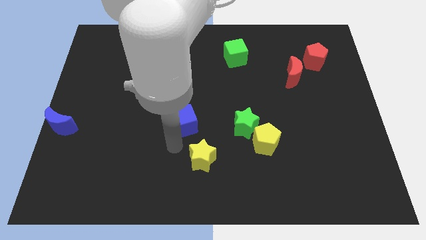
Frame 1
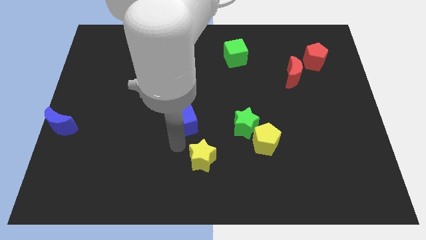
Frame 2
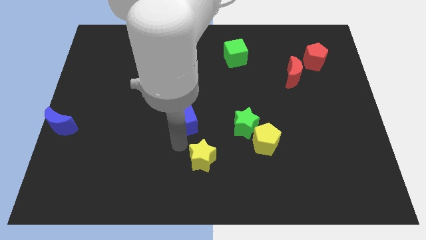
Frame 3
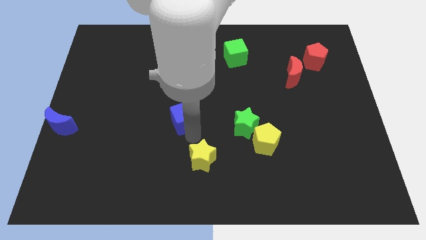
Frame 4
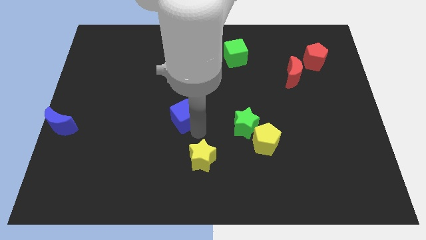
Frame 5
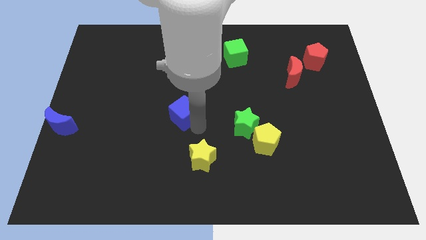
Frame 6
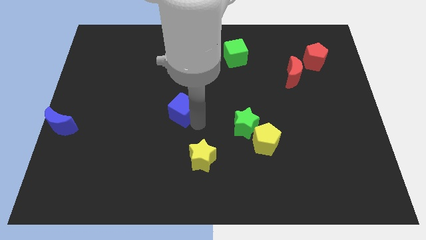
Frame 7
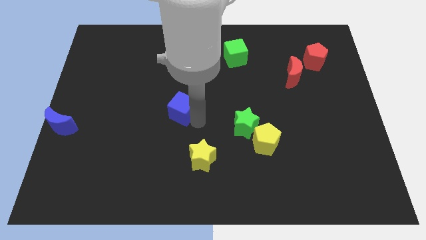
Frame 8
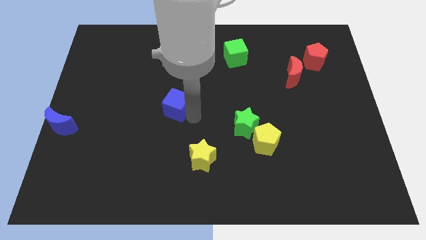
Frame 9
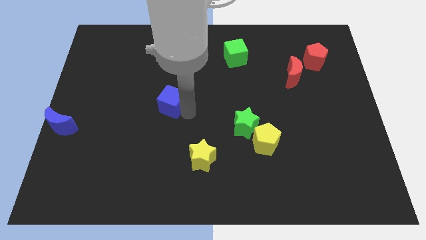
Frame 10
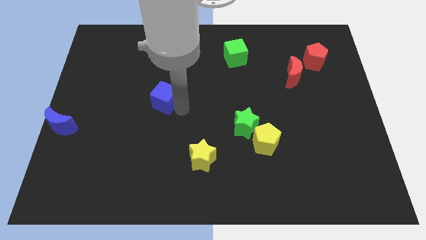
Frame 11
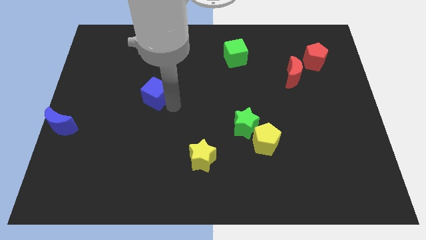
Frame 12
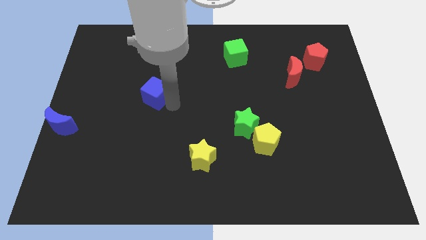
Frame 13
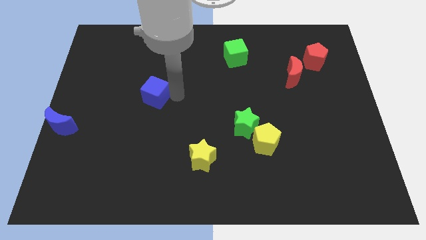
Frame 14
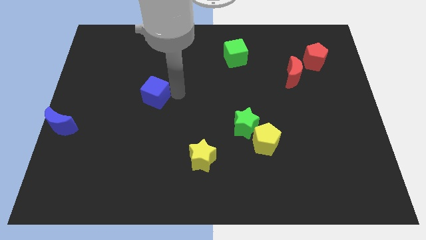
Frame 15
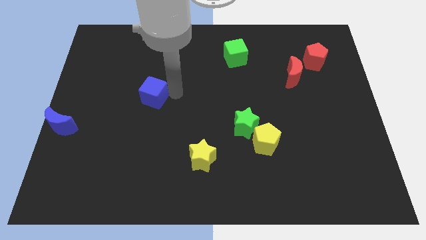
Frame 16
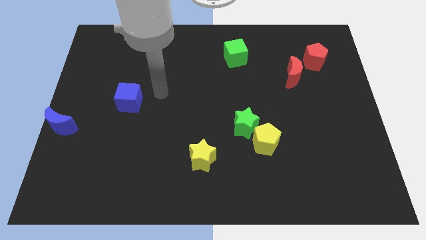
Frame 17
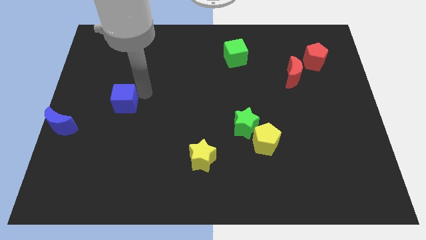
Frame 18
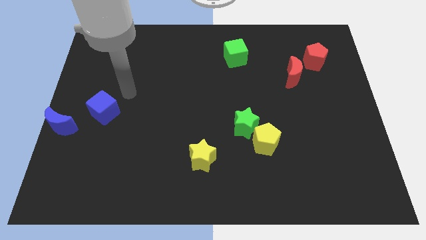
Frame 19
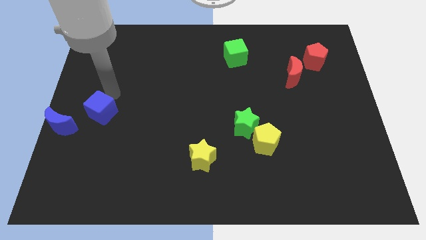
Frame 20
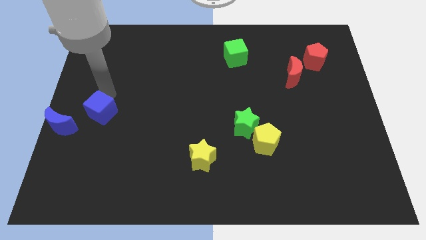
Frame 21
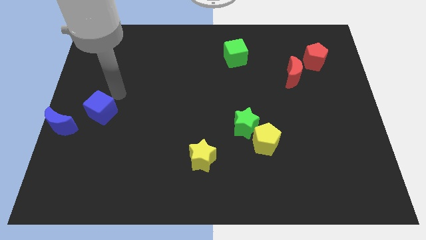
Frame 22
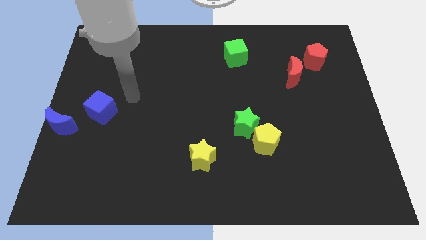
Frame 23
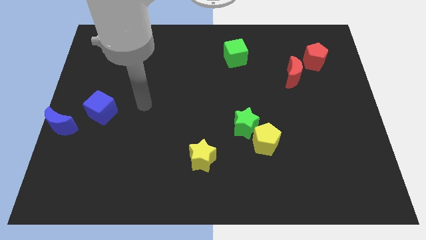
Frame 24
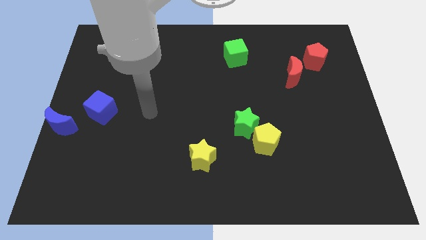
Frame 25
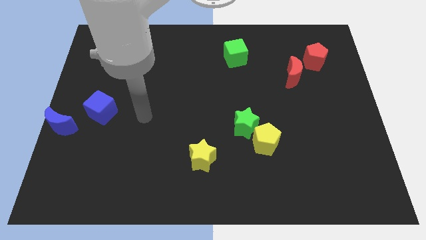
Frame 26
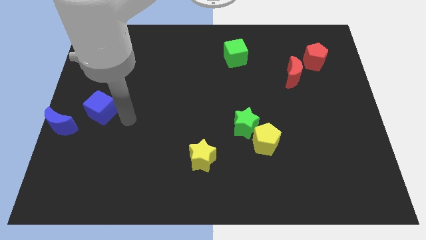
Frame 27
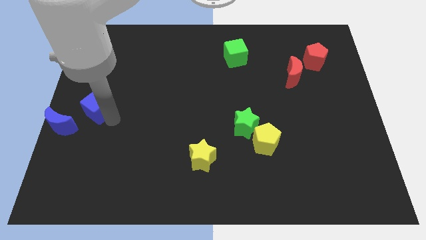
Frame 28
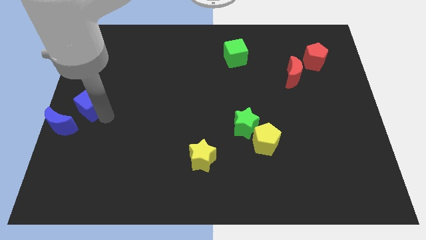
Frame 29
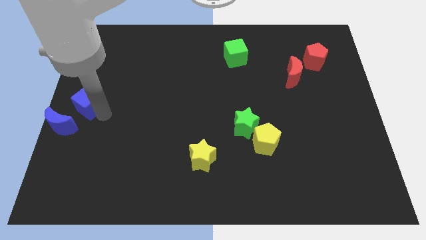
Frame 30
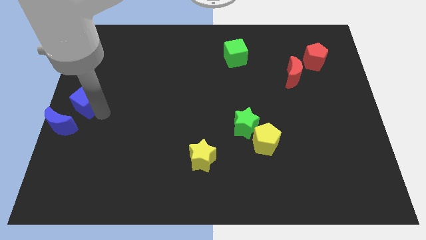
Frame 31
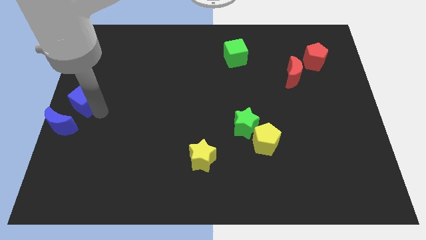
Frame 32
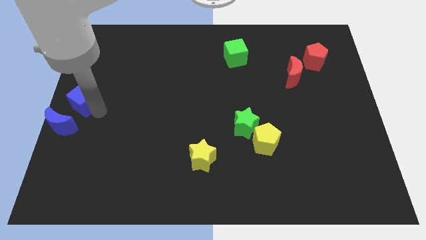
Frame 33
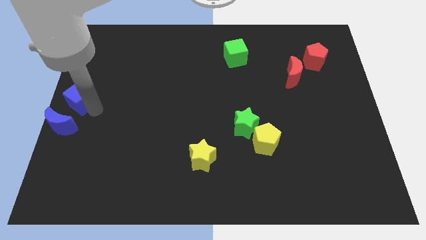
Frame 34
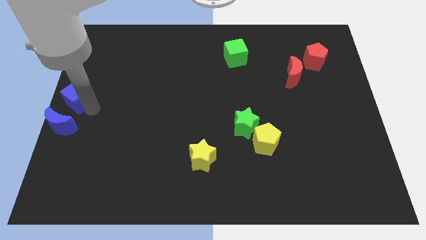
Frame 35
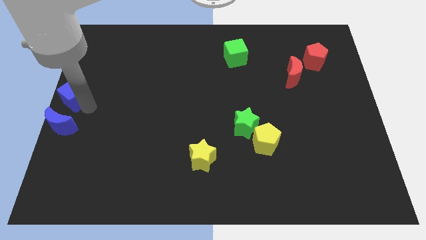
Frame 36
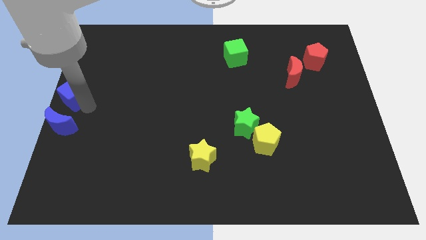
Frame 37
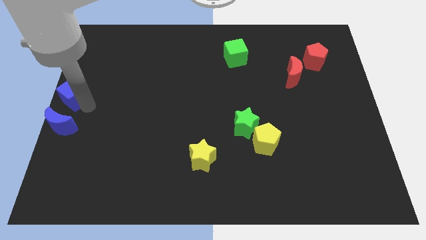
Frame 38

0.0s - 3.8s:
move the blue cube above blue moon

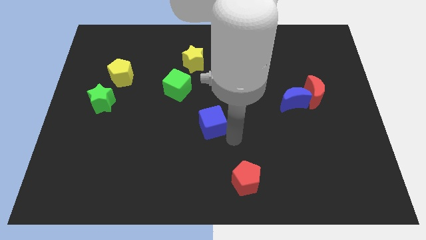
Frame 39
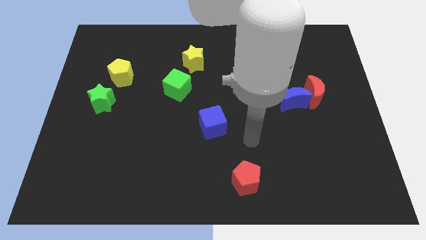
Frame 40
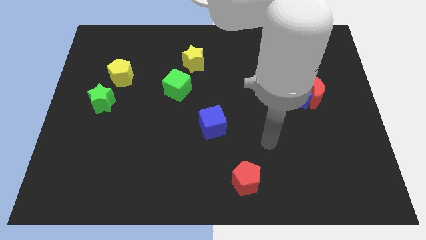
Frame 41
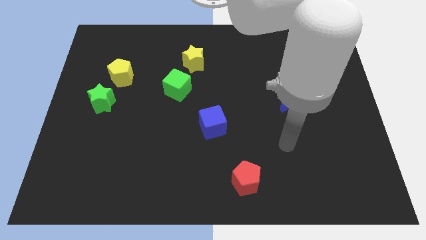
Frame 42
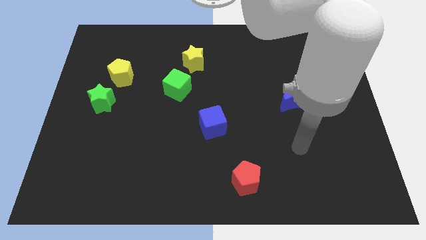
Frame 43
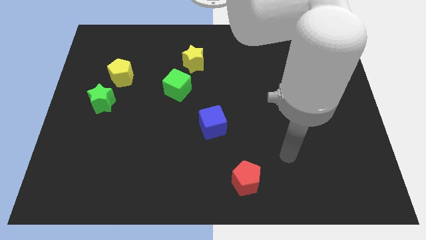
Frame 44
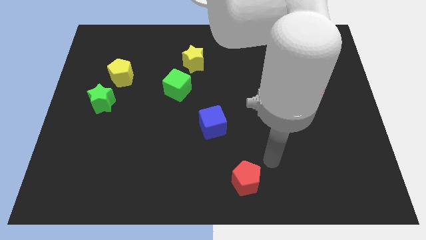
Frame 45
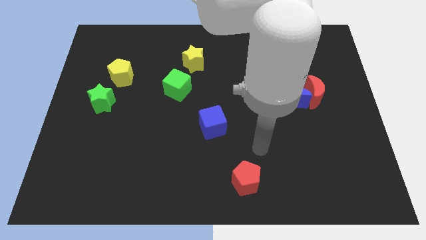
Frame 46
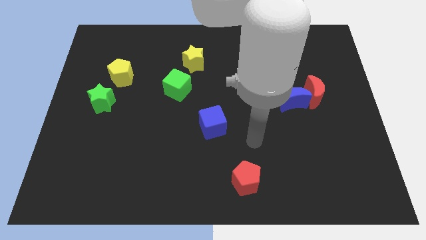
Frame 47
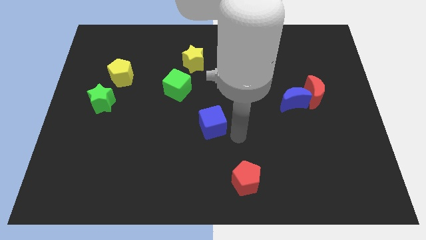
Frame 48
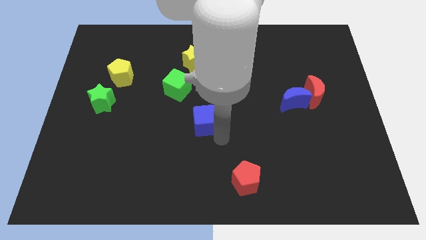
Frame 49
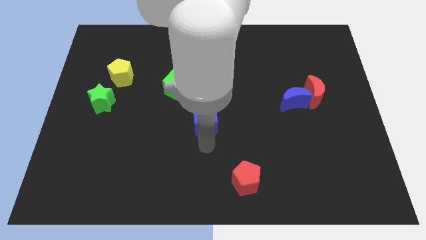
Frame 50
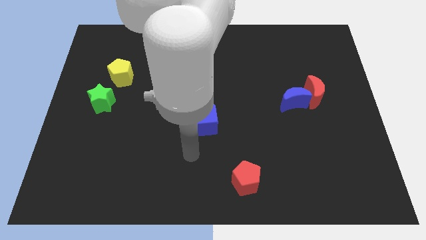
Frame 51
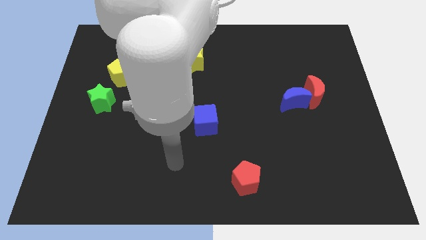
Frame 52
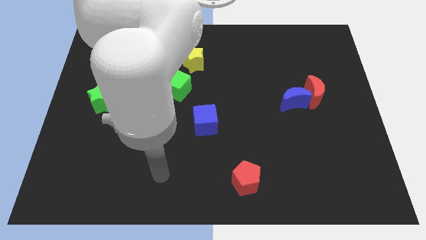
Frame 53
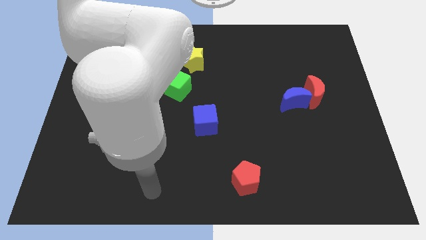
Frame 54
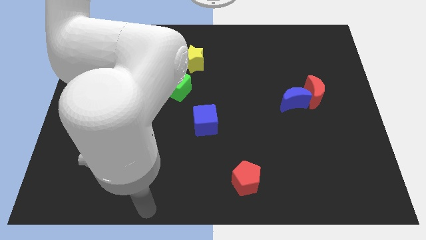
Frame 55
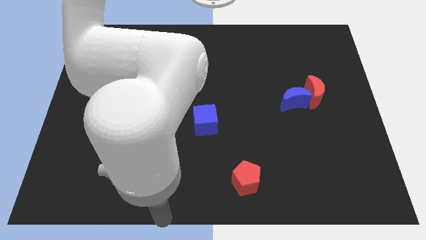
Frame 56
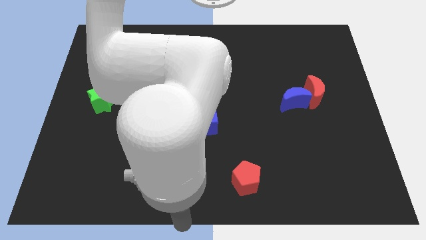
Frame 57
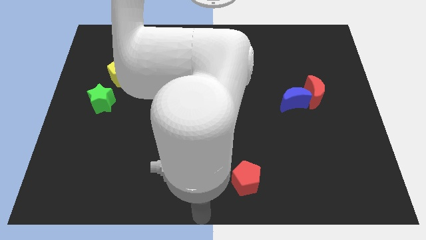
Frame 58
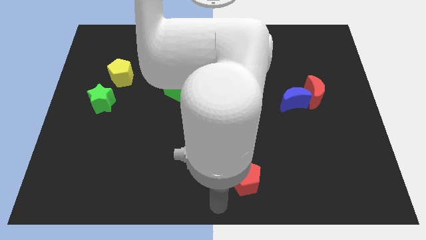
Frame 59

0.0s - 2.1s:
move your arm away from the blue cube

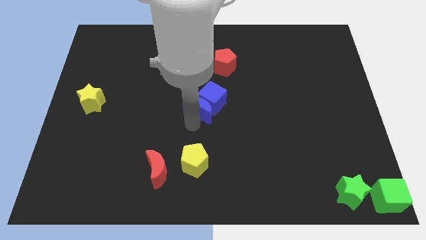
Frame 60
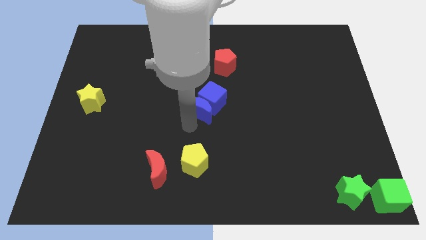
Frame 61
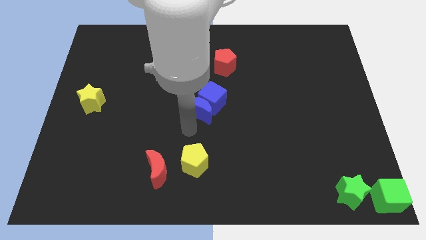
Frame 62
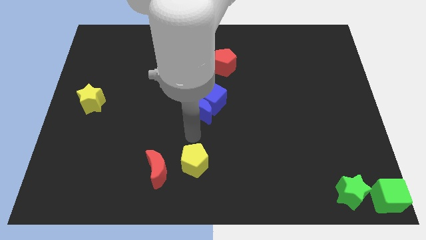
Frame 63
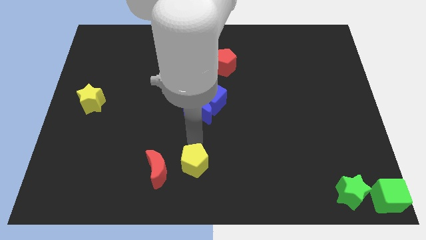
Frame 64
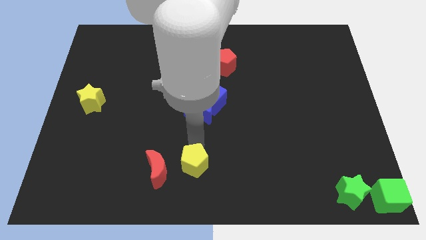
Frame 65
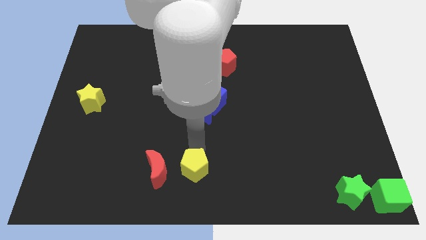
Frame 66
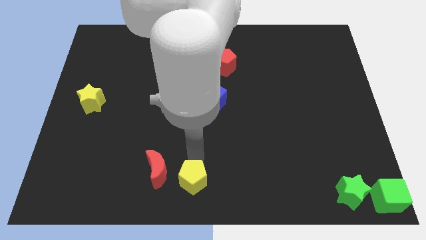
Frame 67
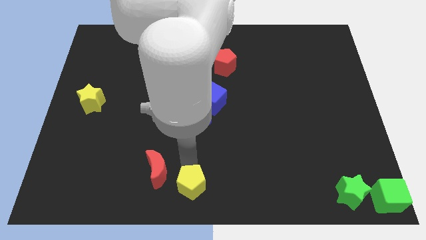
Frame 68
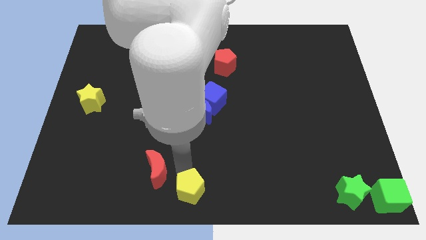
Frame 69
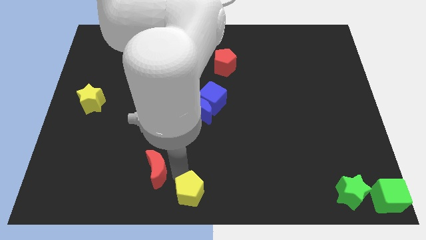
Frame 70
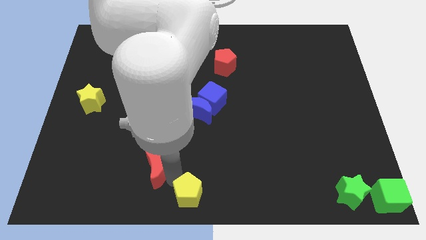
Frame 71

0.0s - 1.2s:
move the yellow pentagon down slightly

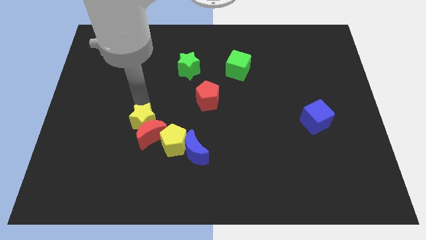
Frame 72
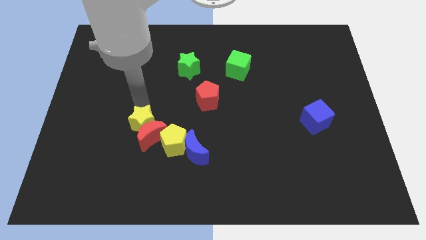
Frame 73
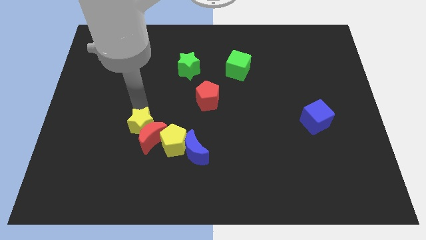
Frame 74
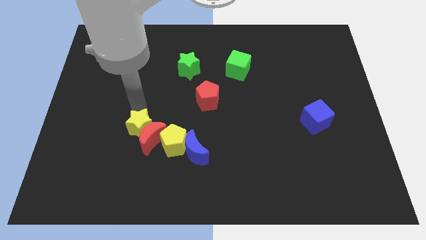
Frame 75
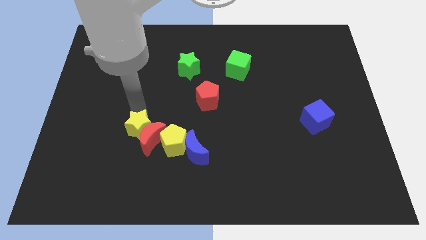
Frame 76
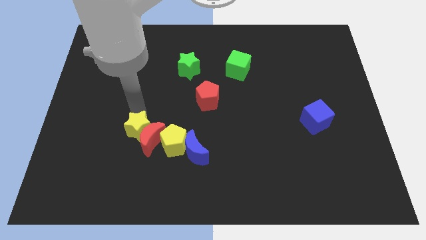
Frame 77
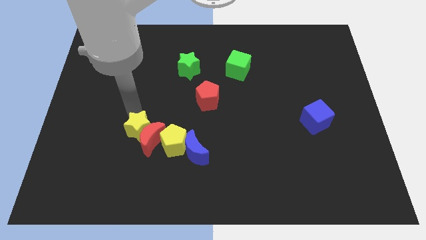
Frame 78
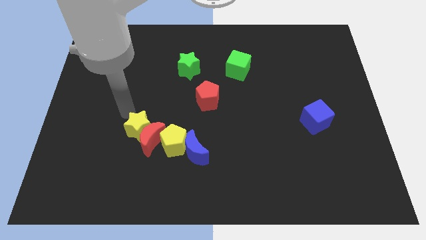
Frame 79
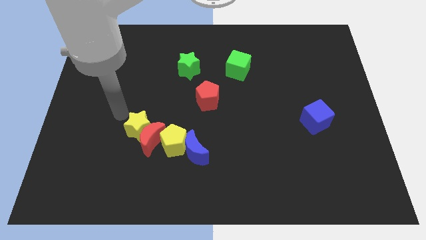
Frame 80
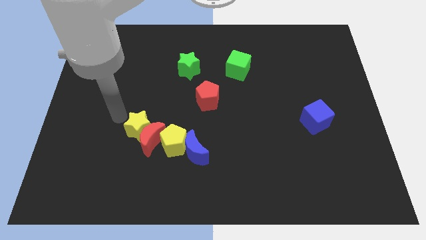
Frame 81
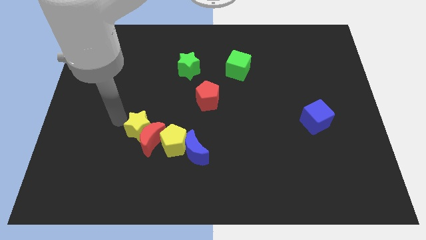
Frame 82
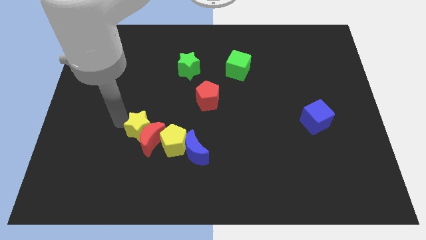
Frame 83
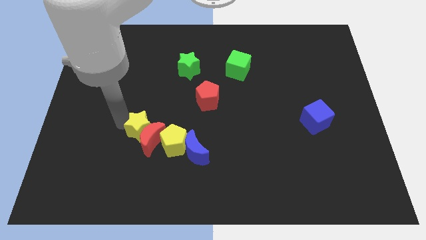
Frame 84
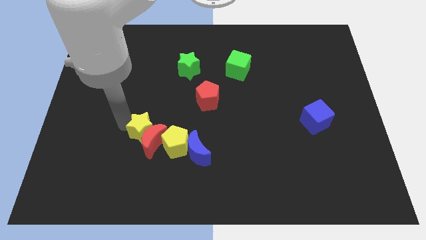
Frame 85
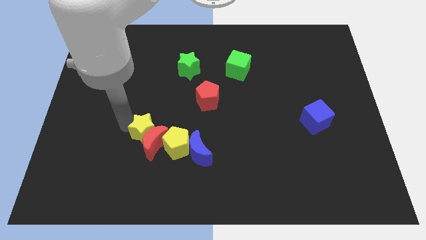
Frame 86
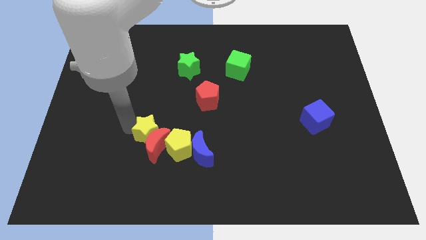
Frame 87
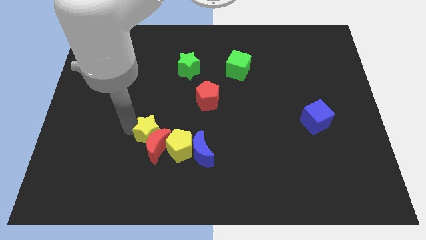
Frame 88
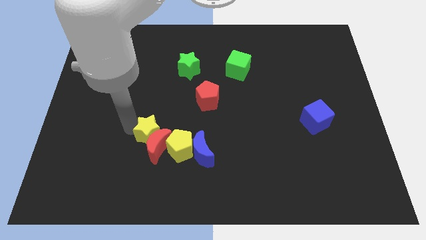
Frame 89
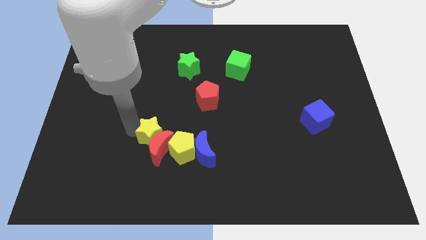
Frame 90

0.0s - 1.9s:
push the yellow star into the red crescent
